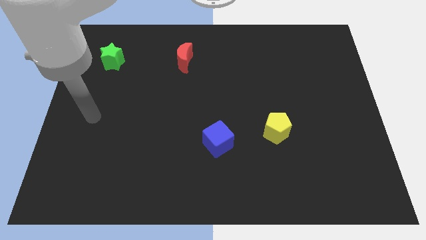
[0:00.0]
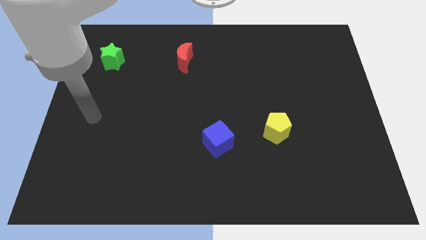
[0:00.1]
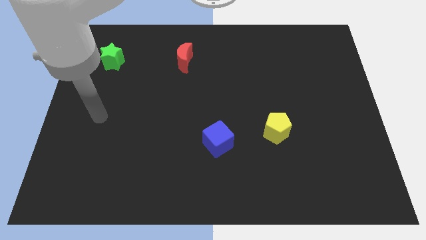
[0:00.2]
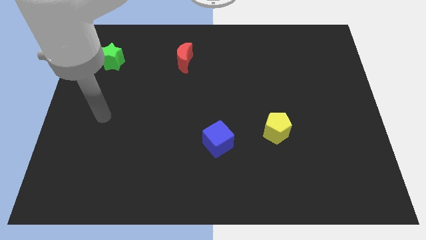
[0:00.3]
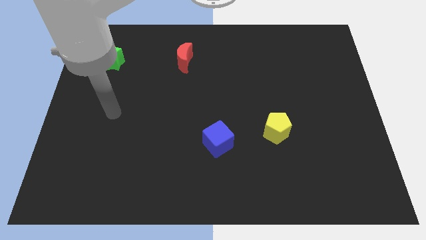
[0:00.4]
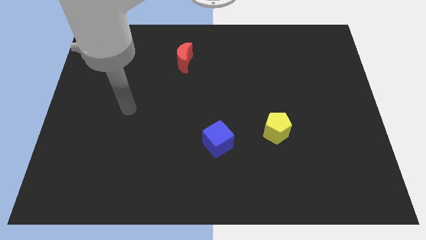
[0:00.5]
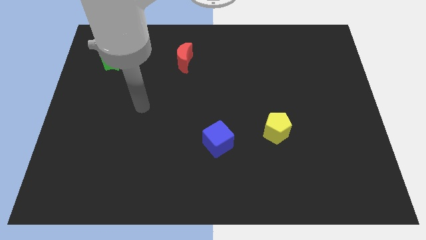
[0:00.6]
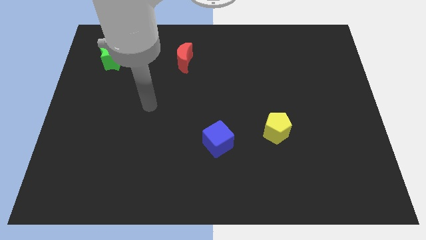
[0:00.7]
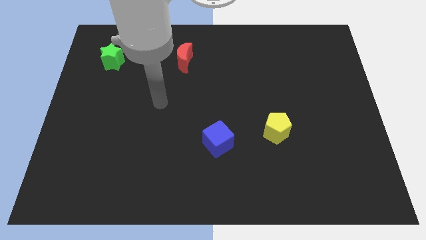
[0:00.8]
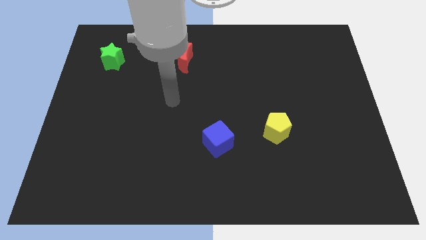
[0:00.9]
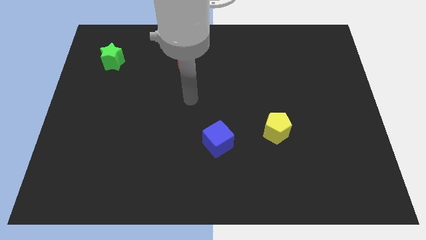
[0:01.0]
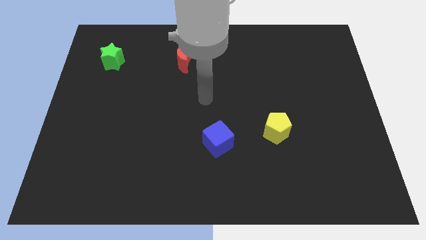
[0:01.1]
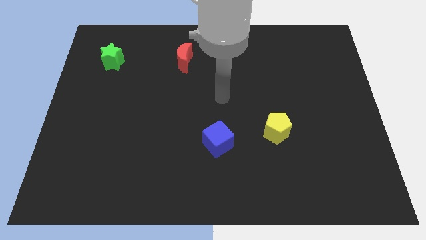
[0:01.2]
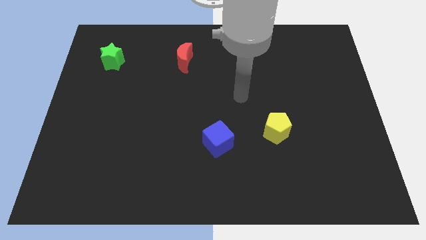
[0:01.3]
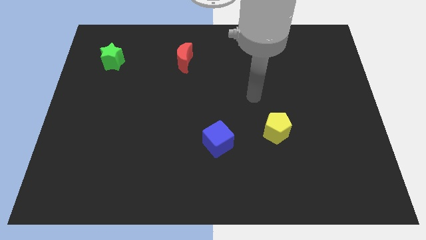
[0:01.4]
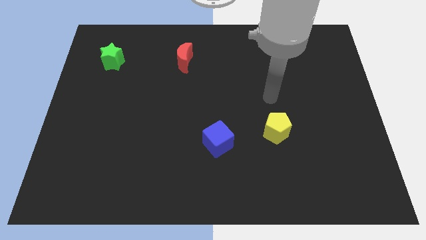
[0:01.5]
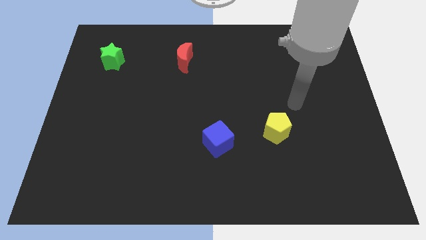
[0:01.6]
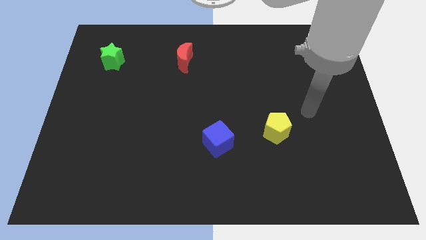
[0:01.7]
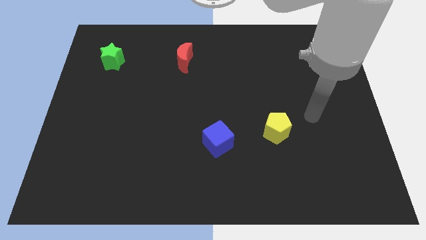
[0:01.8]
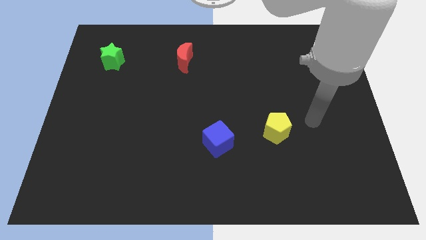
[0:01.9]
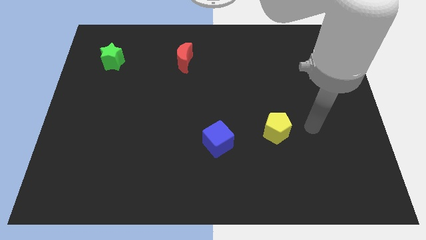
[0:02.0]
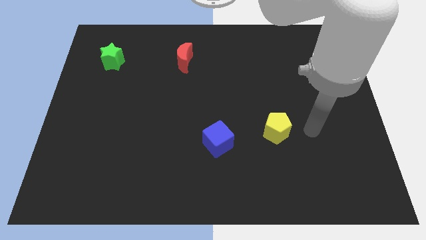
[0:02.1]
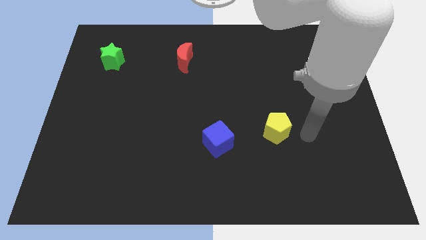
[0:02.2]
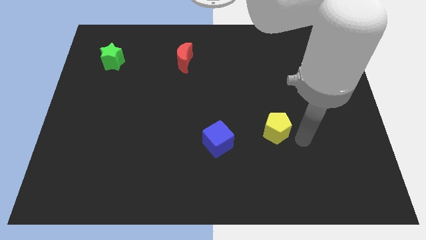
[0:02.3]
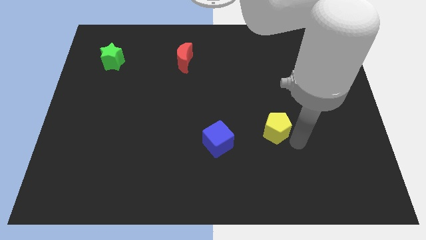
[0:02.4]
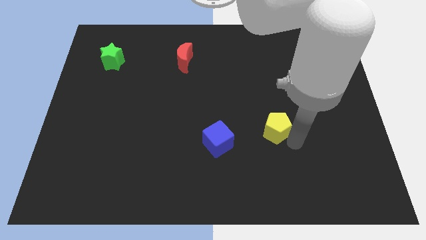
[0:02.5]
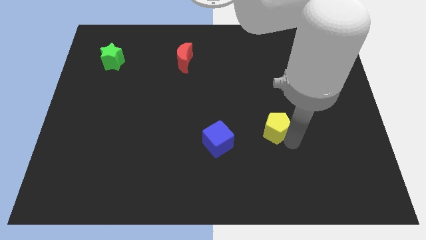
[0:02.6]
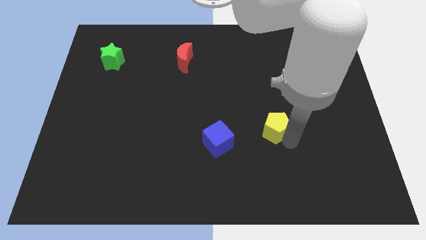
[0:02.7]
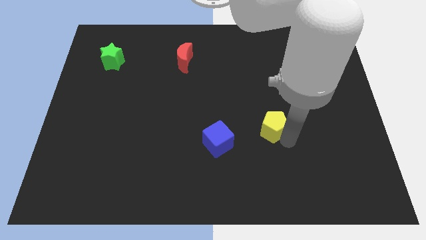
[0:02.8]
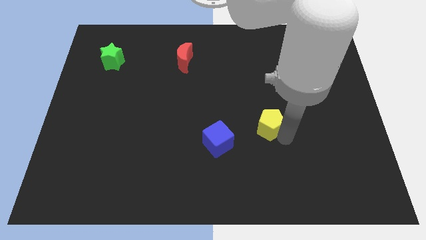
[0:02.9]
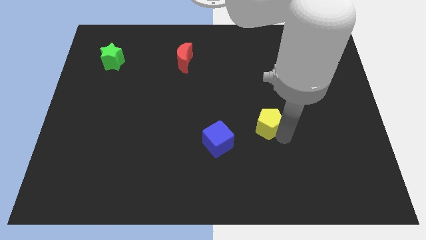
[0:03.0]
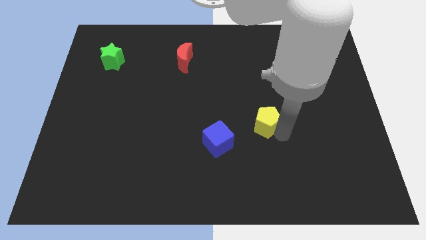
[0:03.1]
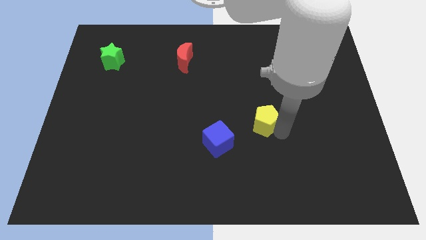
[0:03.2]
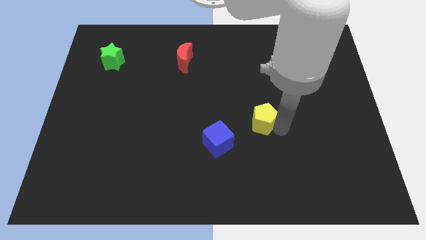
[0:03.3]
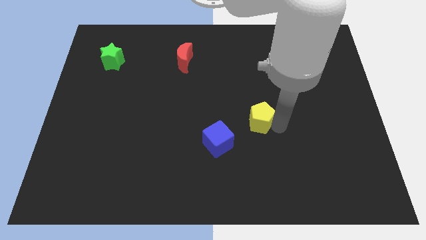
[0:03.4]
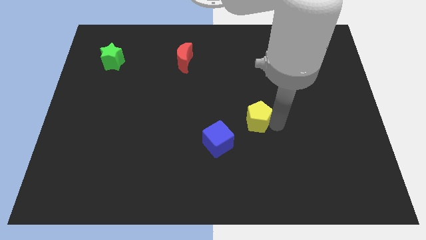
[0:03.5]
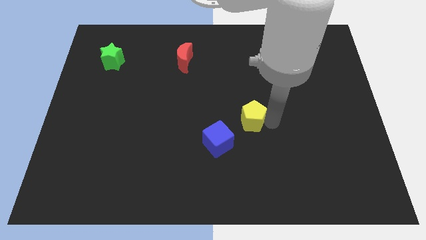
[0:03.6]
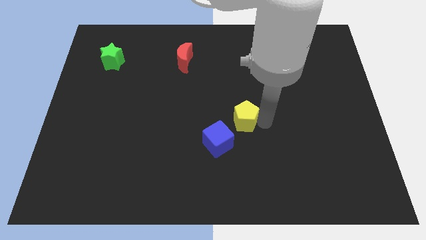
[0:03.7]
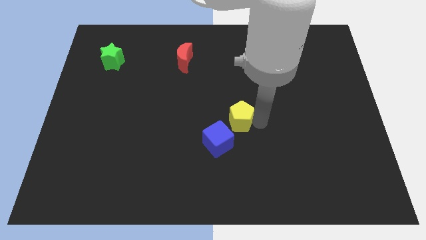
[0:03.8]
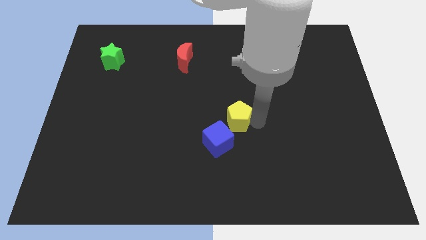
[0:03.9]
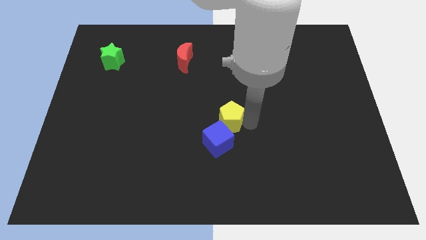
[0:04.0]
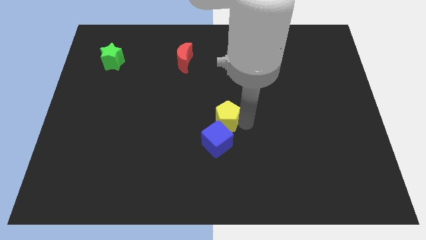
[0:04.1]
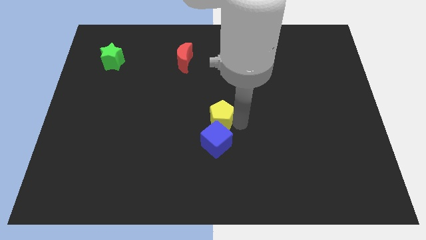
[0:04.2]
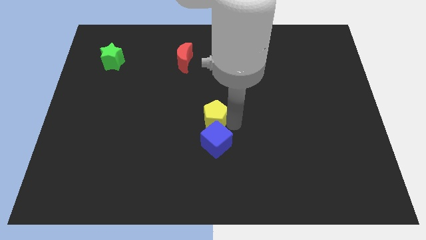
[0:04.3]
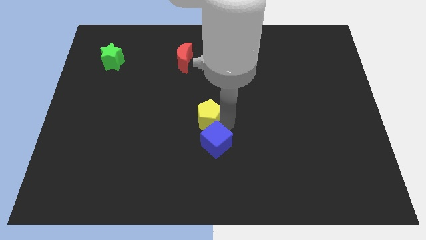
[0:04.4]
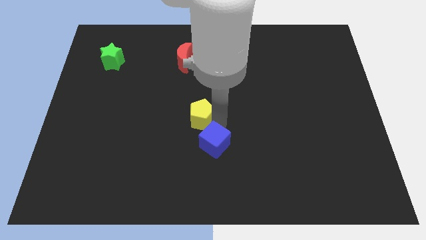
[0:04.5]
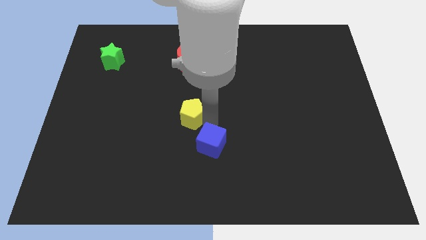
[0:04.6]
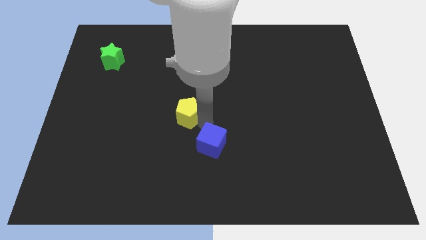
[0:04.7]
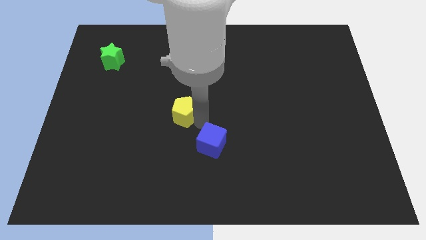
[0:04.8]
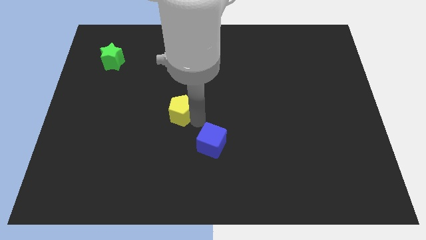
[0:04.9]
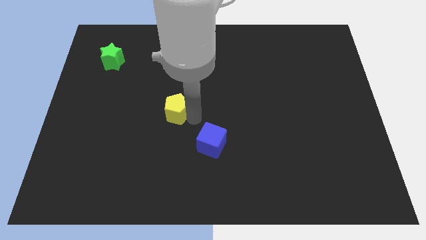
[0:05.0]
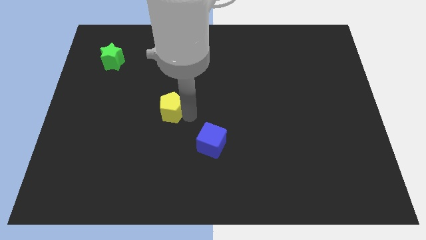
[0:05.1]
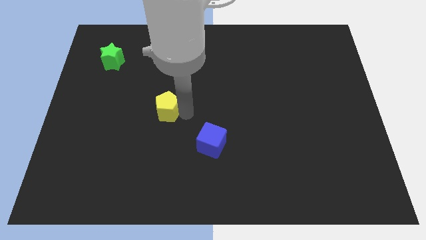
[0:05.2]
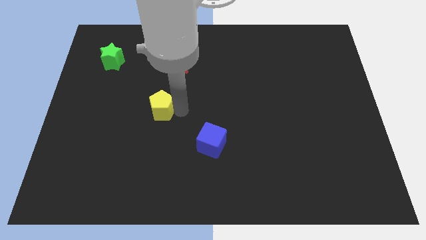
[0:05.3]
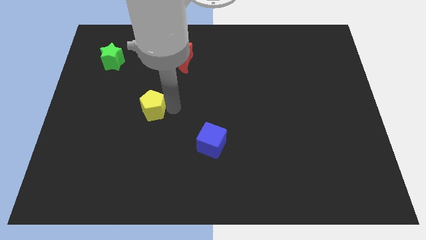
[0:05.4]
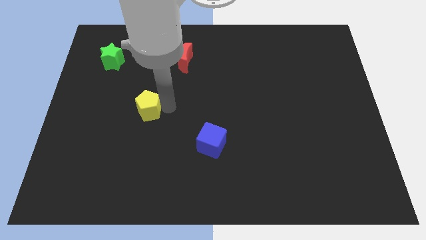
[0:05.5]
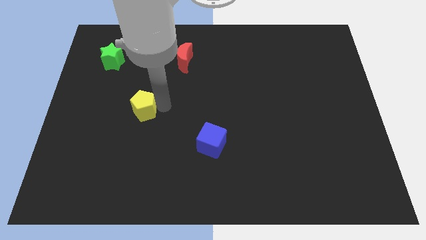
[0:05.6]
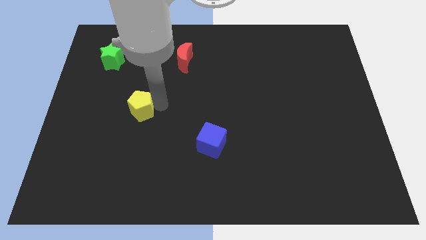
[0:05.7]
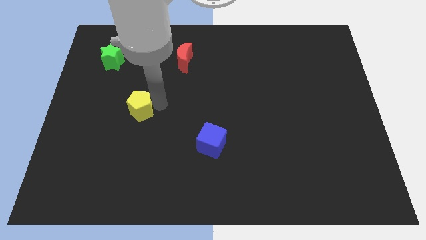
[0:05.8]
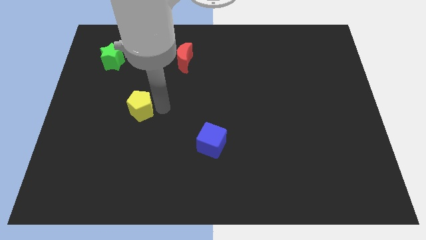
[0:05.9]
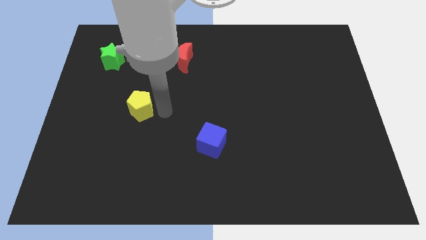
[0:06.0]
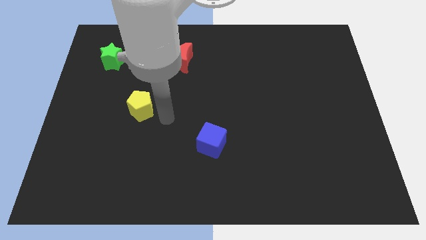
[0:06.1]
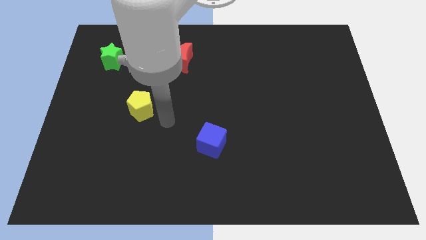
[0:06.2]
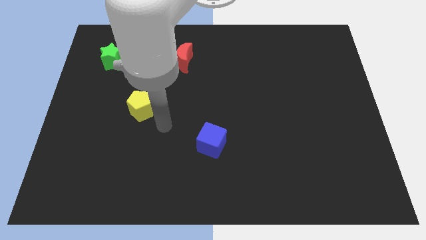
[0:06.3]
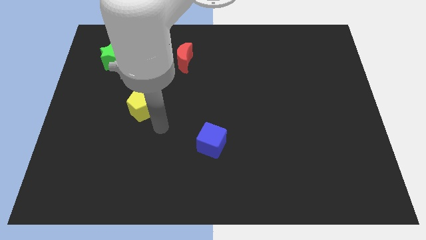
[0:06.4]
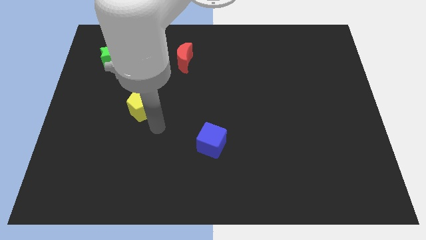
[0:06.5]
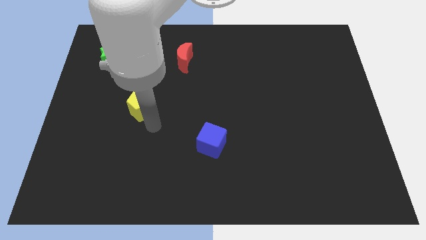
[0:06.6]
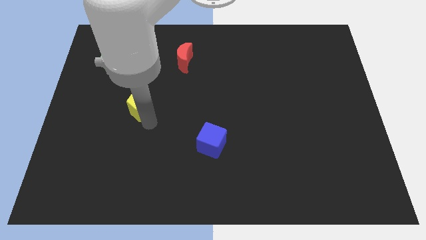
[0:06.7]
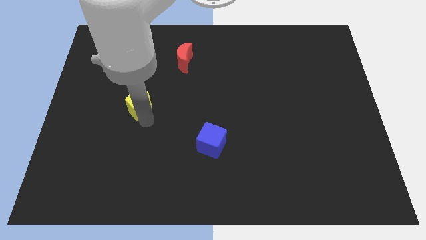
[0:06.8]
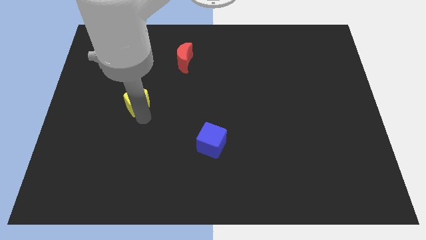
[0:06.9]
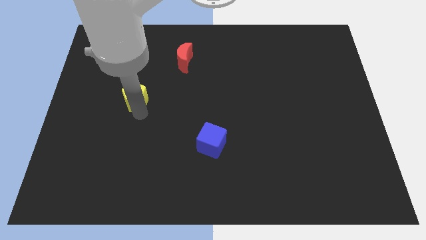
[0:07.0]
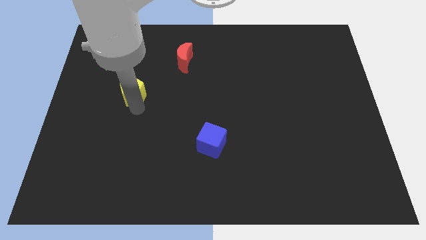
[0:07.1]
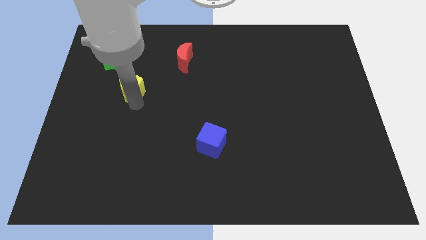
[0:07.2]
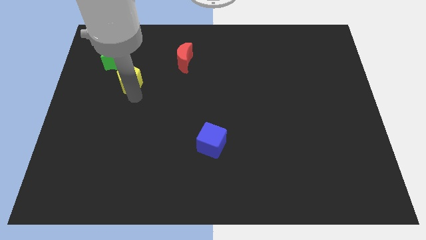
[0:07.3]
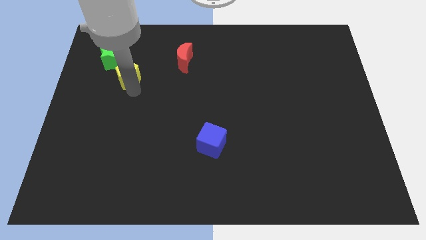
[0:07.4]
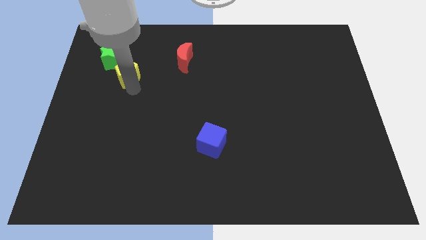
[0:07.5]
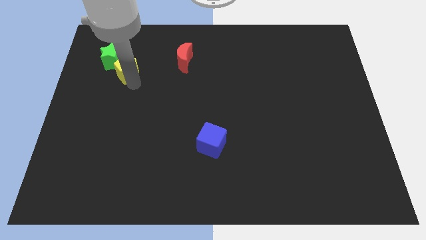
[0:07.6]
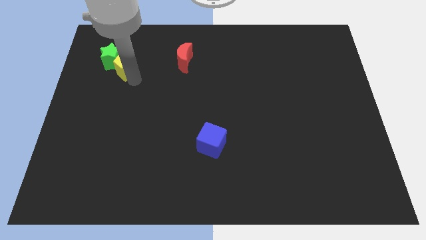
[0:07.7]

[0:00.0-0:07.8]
slide the pentagon next to the star

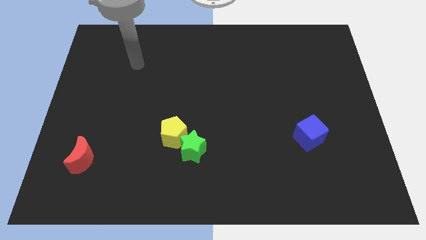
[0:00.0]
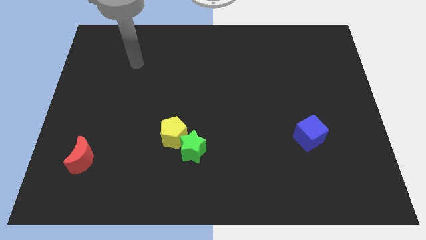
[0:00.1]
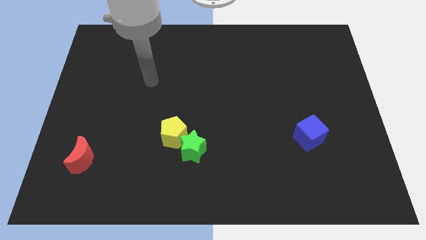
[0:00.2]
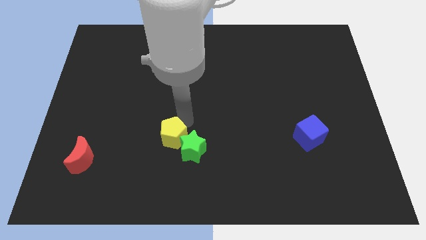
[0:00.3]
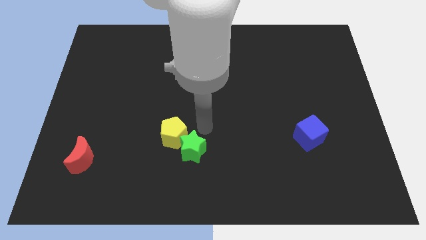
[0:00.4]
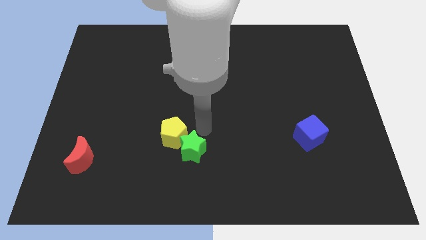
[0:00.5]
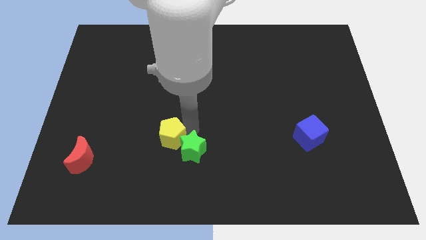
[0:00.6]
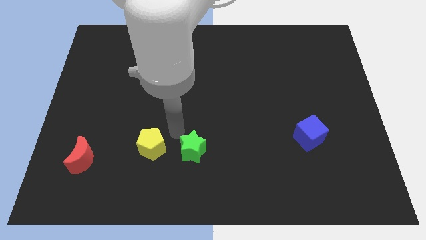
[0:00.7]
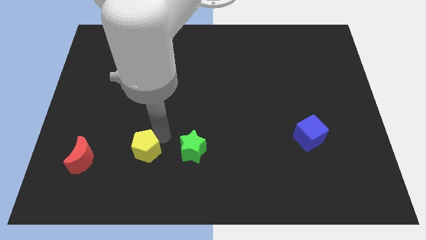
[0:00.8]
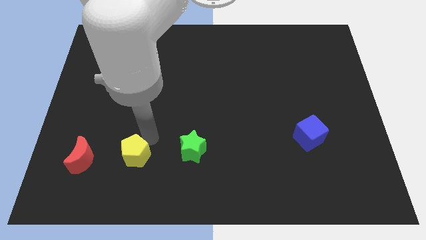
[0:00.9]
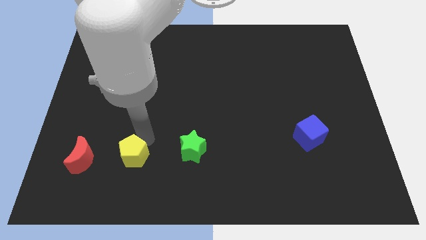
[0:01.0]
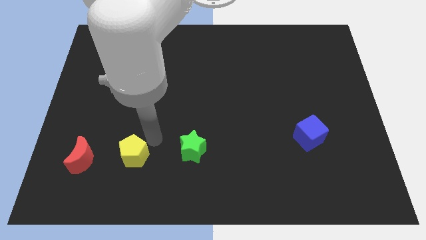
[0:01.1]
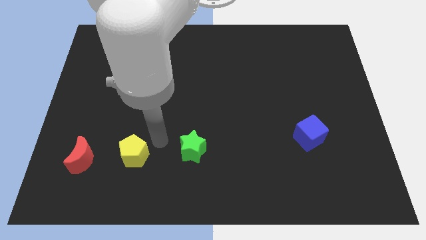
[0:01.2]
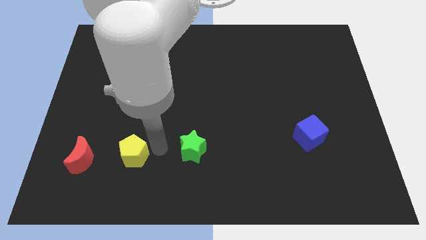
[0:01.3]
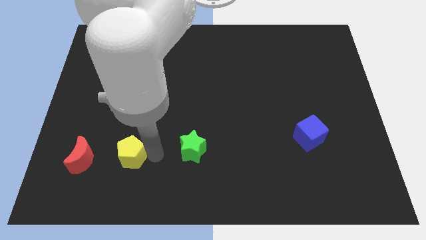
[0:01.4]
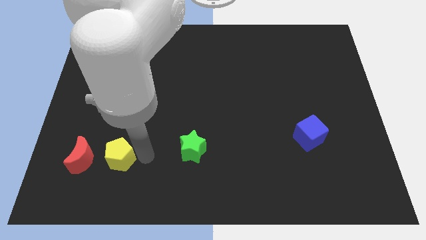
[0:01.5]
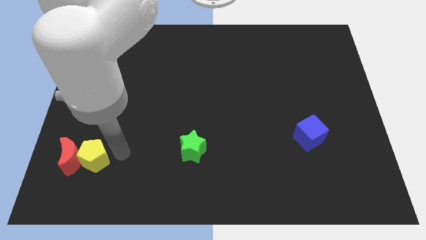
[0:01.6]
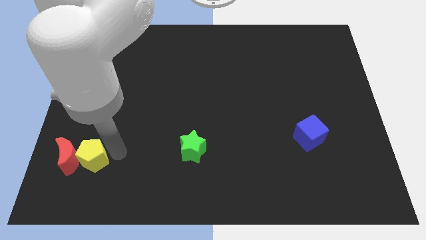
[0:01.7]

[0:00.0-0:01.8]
move the yellow pentagon towards the red block
